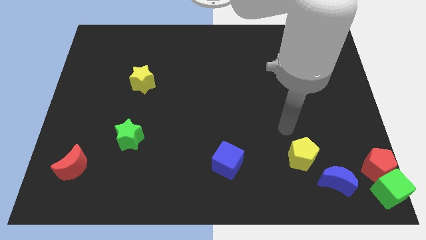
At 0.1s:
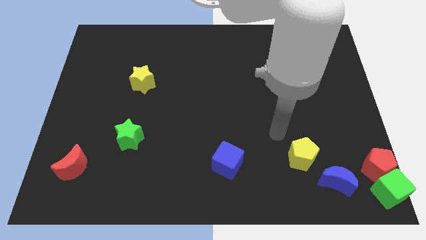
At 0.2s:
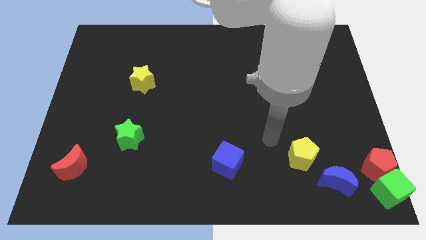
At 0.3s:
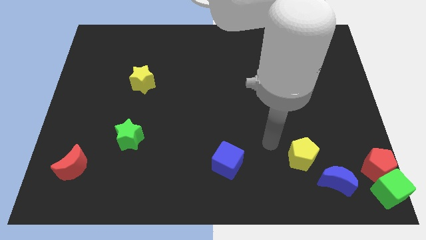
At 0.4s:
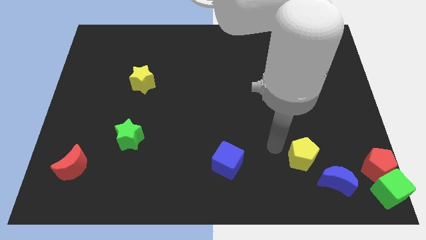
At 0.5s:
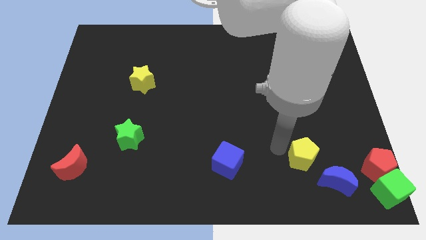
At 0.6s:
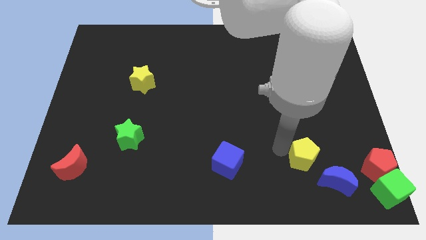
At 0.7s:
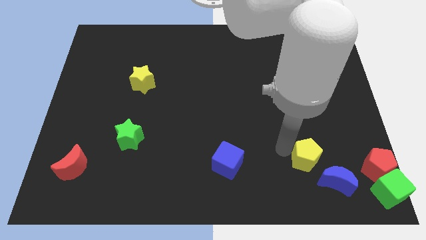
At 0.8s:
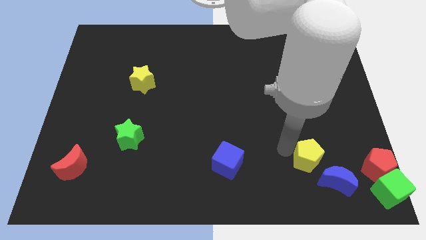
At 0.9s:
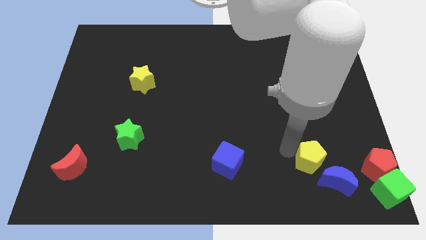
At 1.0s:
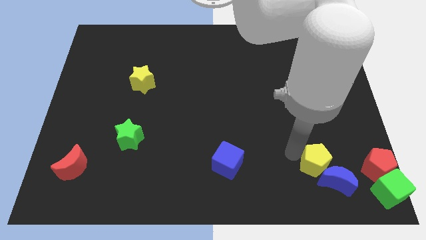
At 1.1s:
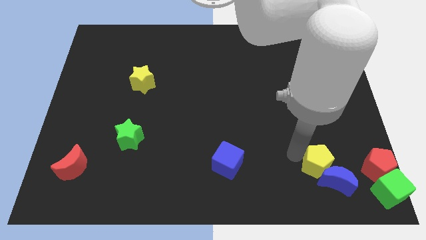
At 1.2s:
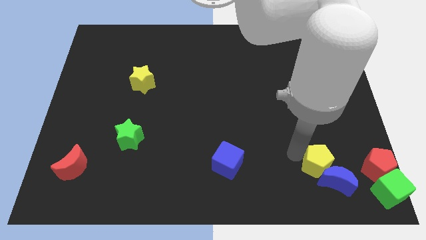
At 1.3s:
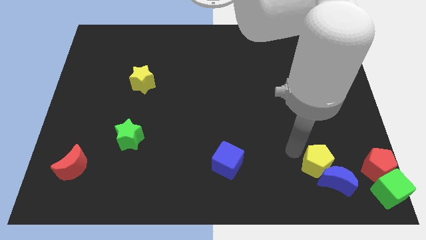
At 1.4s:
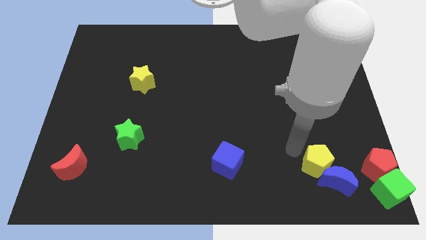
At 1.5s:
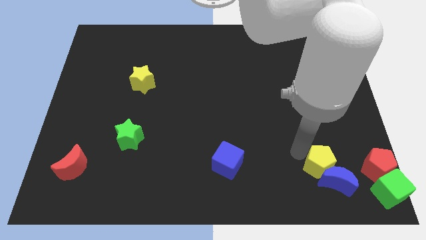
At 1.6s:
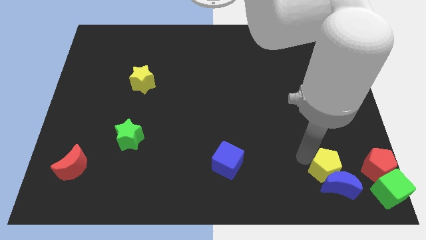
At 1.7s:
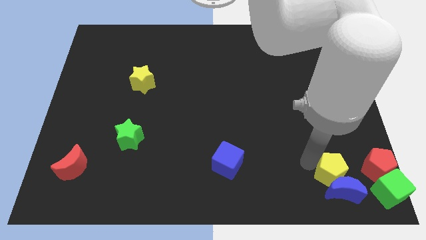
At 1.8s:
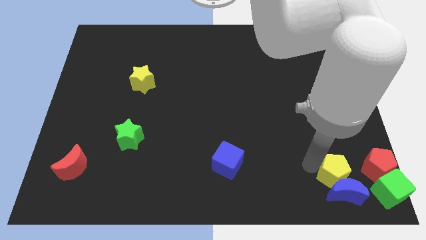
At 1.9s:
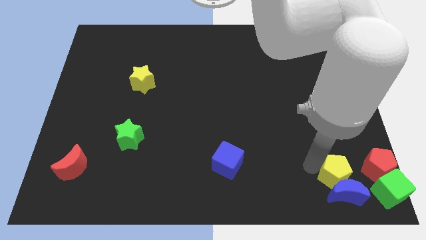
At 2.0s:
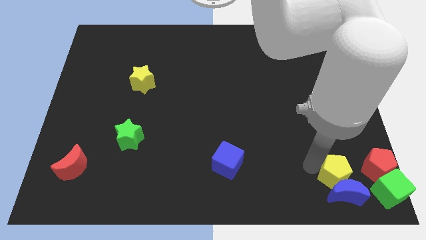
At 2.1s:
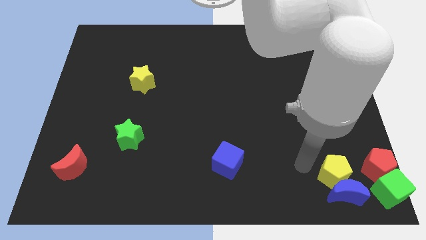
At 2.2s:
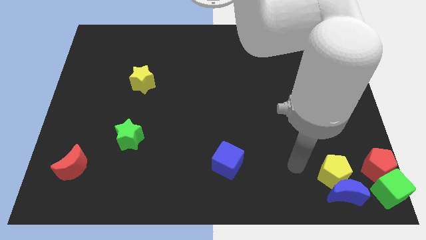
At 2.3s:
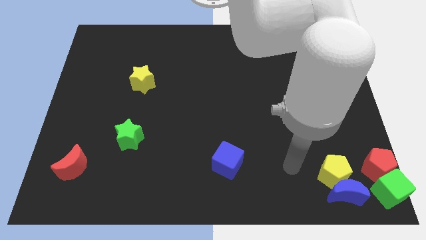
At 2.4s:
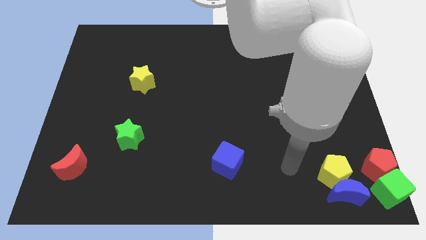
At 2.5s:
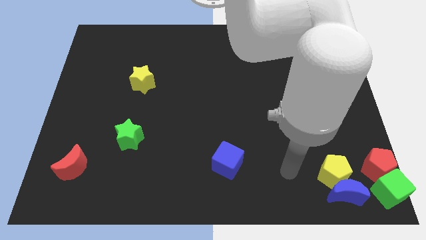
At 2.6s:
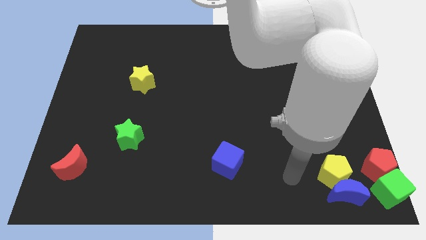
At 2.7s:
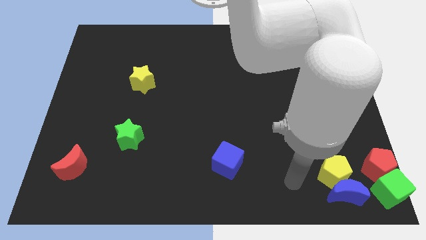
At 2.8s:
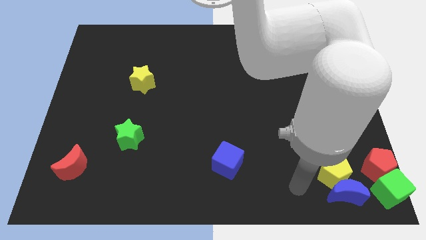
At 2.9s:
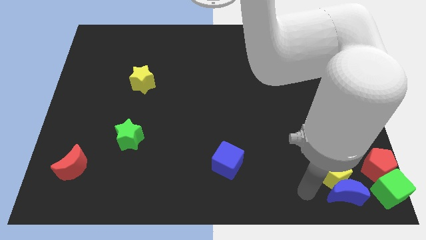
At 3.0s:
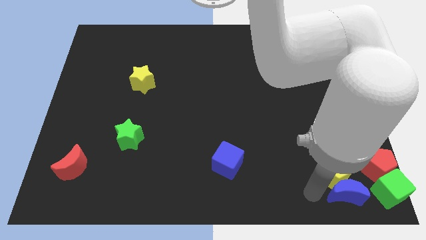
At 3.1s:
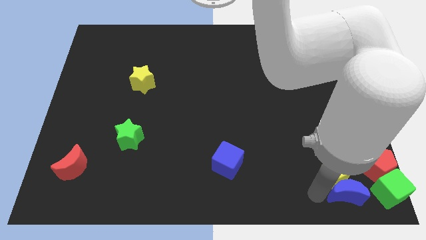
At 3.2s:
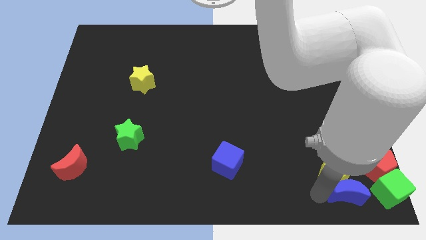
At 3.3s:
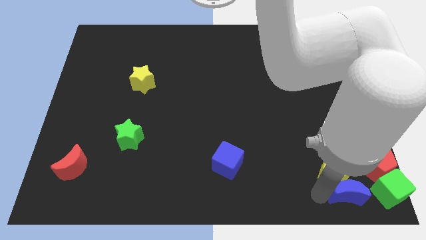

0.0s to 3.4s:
push the blue crescent along with yellow pentagon towards the bottom of the board

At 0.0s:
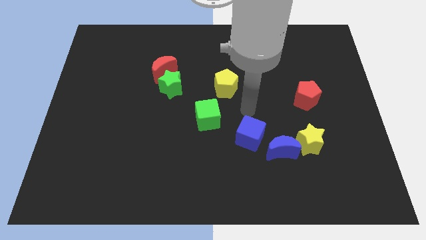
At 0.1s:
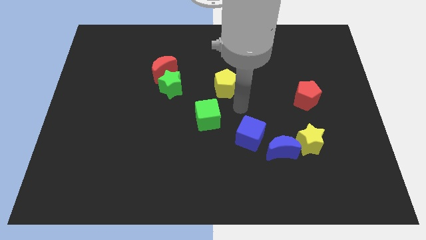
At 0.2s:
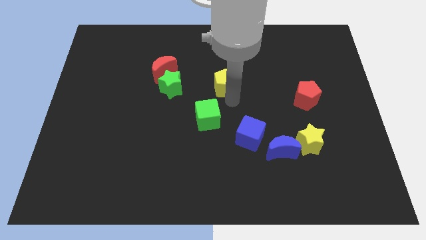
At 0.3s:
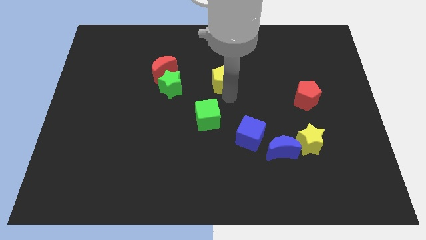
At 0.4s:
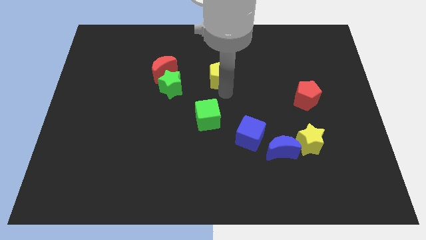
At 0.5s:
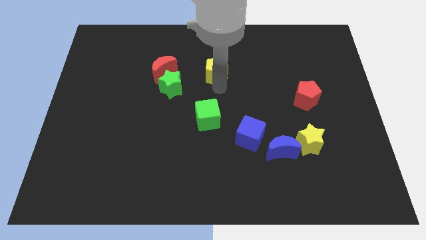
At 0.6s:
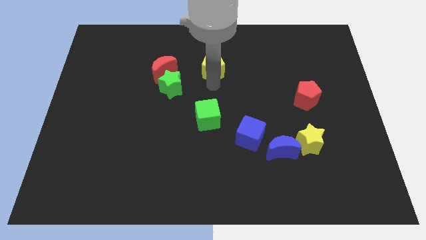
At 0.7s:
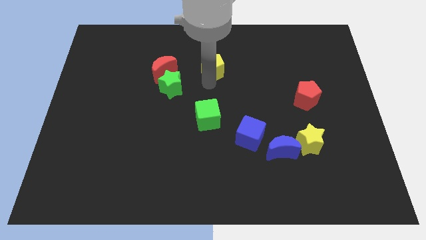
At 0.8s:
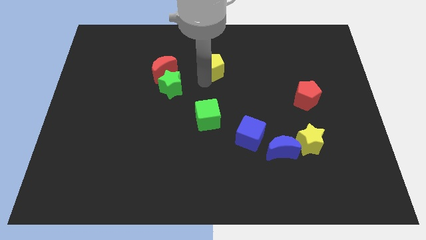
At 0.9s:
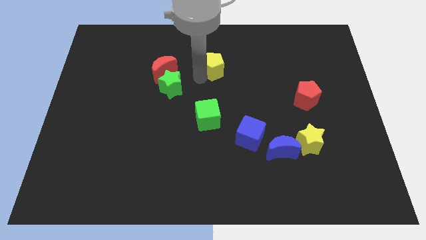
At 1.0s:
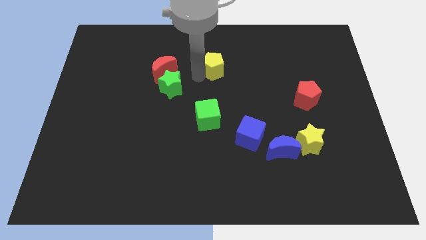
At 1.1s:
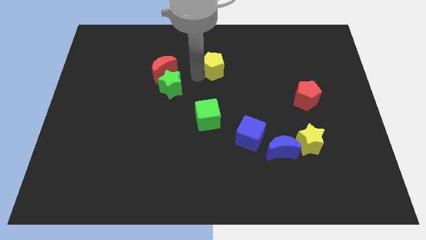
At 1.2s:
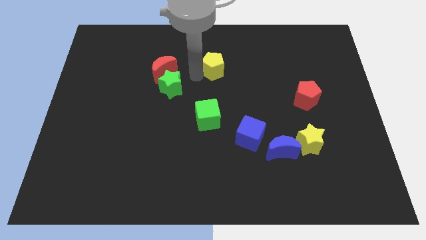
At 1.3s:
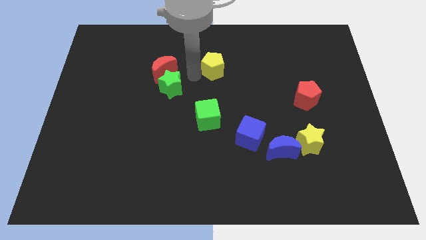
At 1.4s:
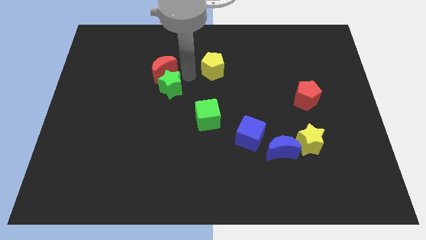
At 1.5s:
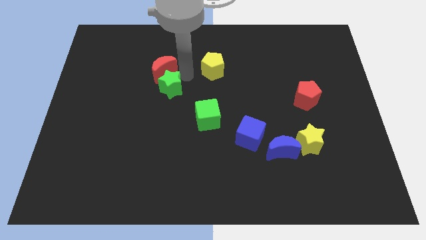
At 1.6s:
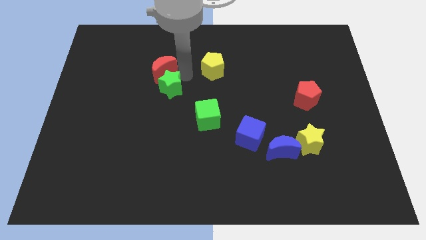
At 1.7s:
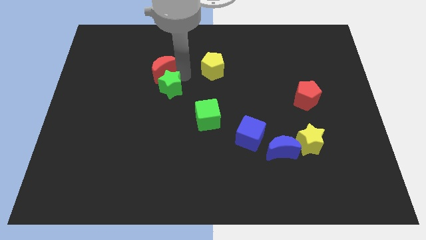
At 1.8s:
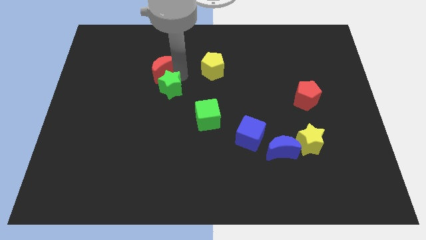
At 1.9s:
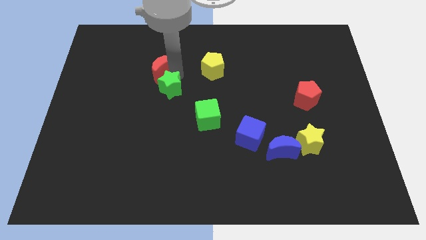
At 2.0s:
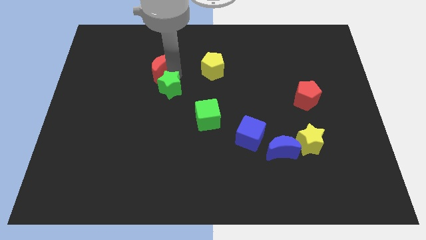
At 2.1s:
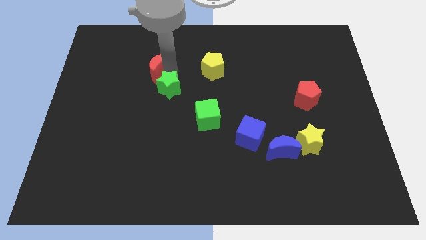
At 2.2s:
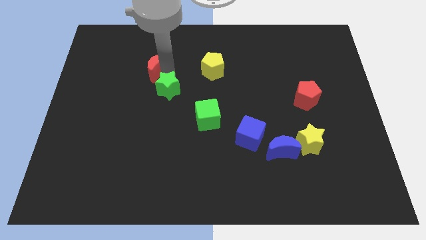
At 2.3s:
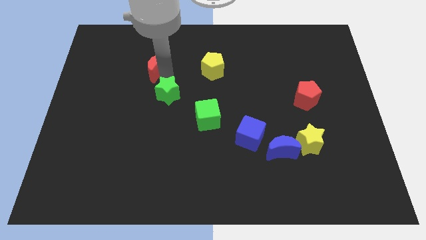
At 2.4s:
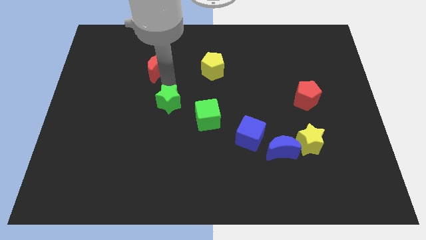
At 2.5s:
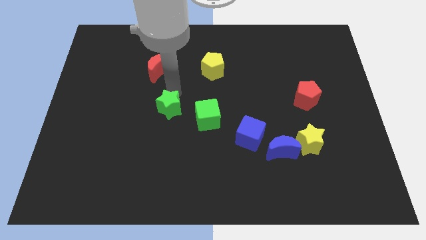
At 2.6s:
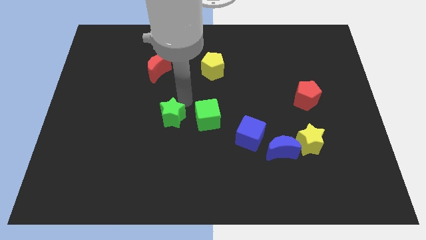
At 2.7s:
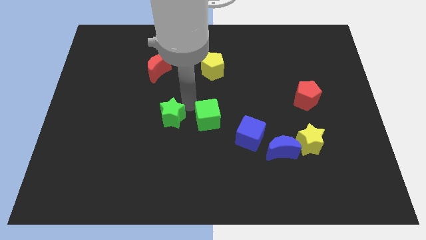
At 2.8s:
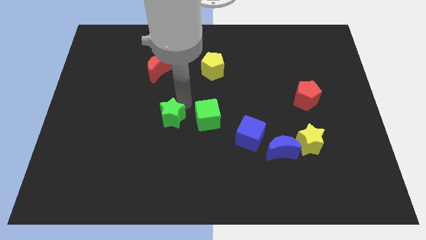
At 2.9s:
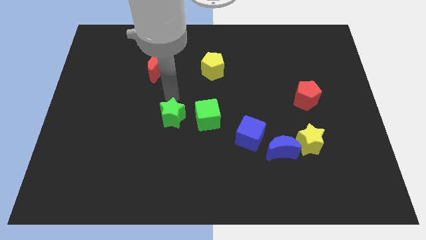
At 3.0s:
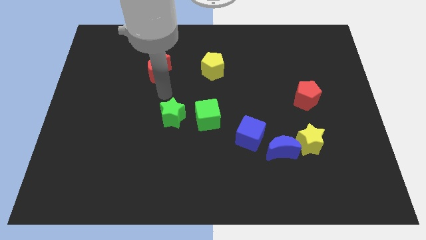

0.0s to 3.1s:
push the green star left to the green cube

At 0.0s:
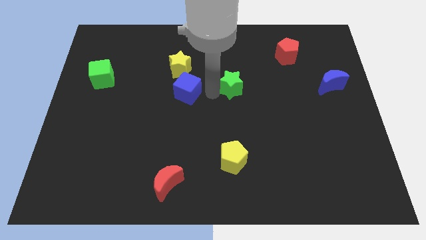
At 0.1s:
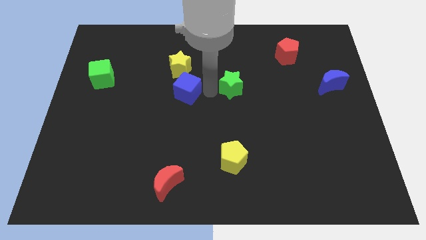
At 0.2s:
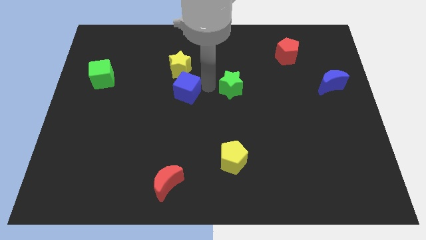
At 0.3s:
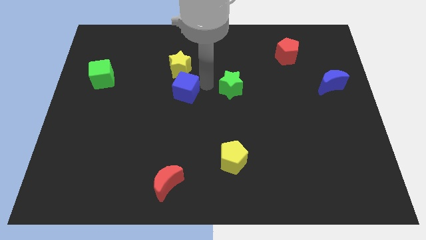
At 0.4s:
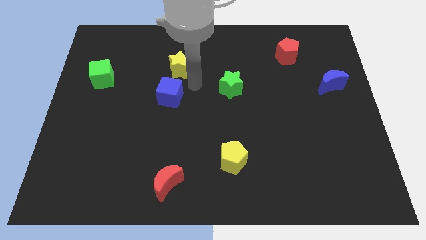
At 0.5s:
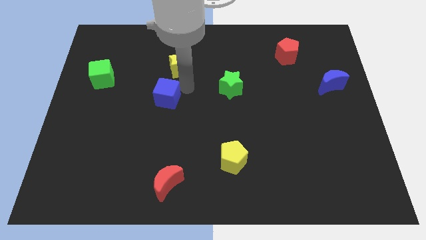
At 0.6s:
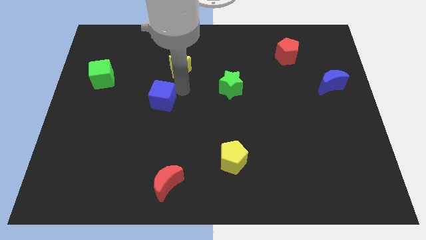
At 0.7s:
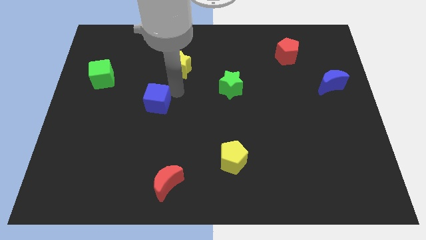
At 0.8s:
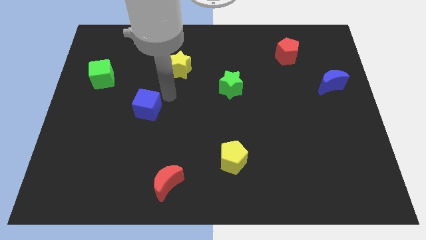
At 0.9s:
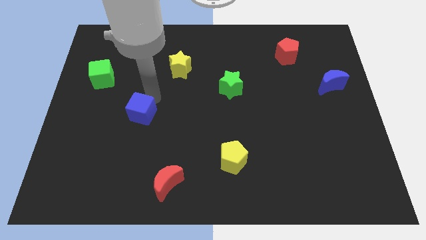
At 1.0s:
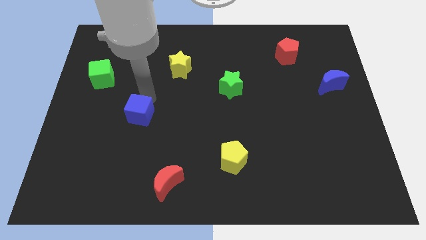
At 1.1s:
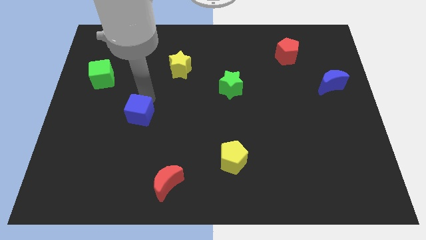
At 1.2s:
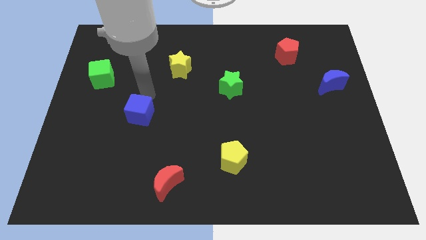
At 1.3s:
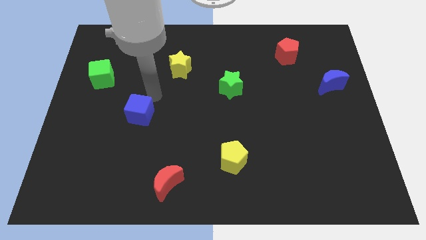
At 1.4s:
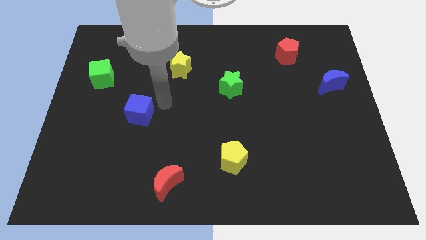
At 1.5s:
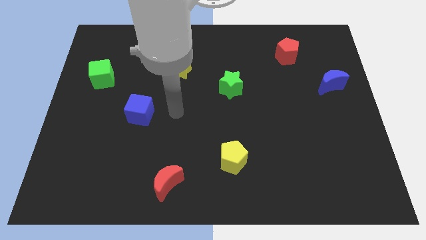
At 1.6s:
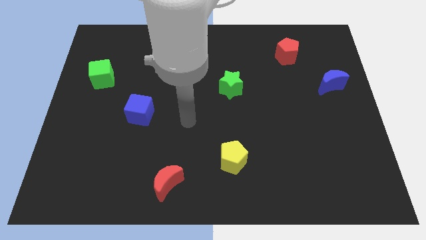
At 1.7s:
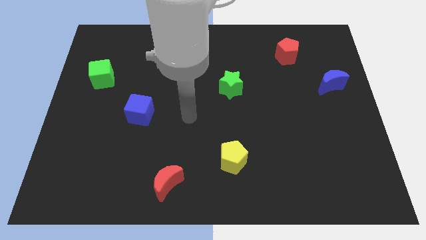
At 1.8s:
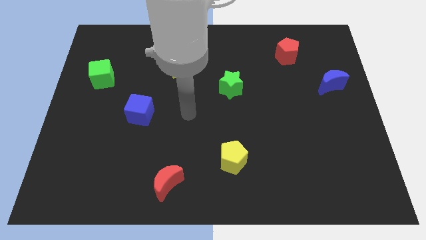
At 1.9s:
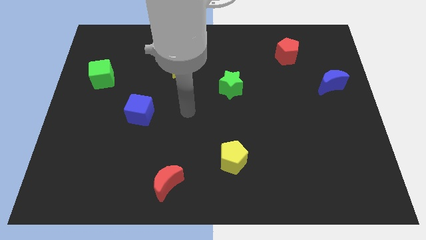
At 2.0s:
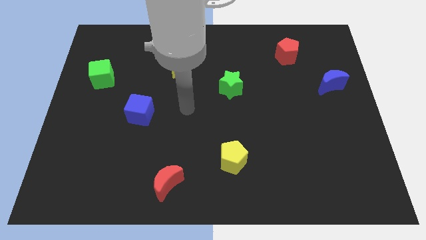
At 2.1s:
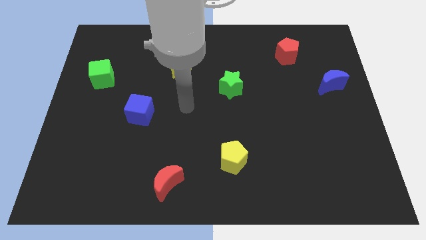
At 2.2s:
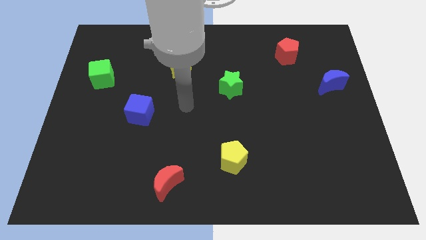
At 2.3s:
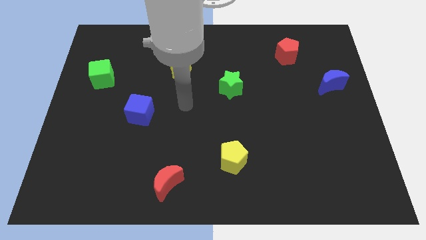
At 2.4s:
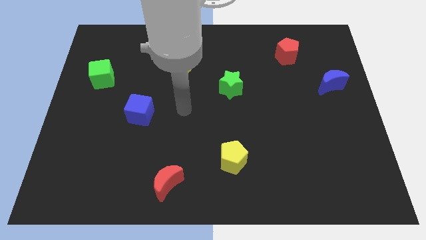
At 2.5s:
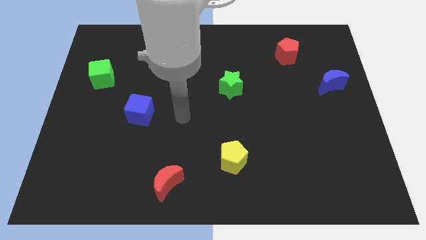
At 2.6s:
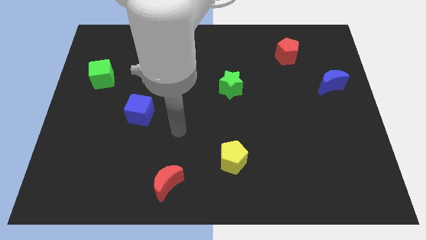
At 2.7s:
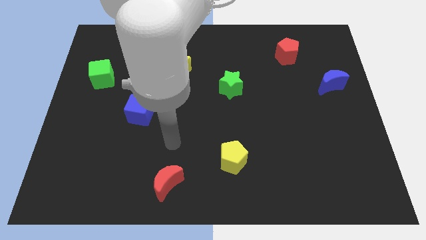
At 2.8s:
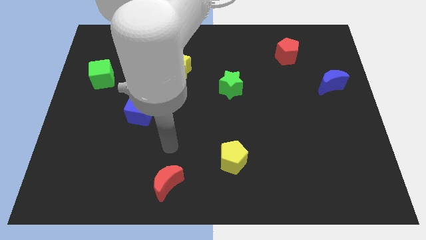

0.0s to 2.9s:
place the blue cube diagonally to the green cube
